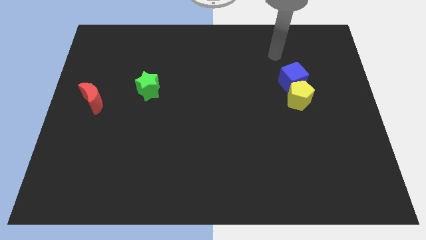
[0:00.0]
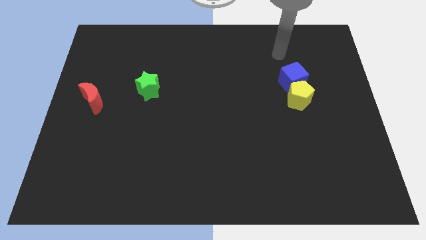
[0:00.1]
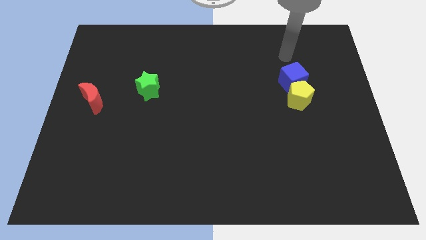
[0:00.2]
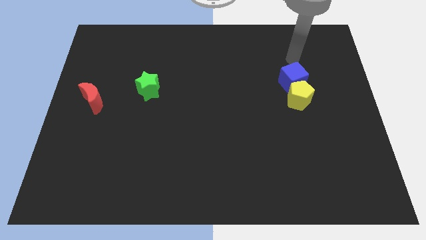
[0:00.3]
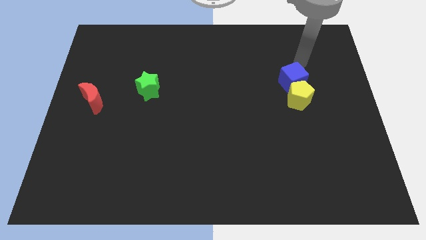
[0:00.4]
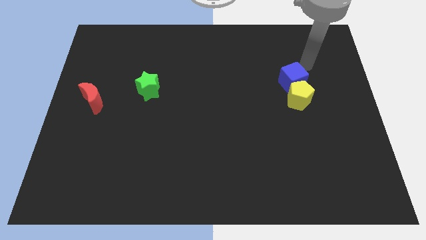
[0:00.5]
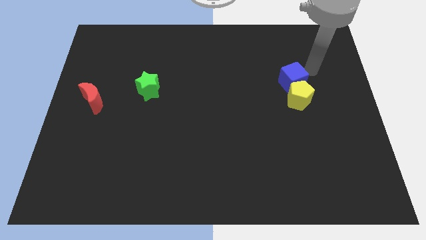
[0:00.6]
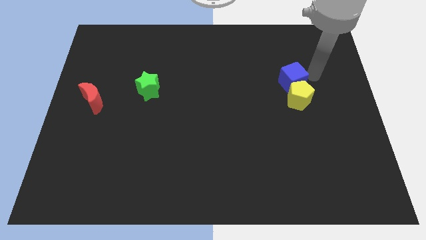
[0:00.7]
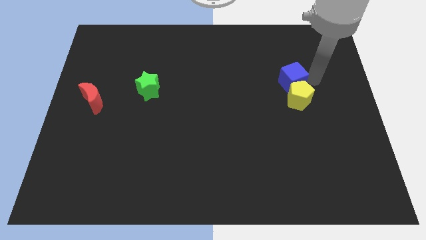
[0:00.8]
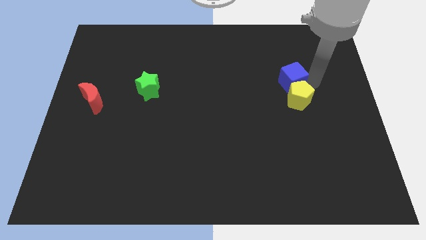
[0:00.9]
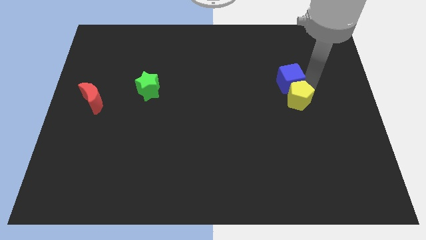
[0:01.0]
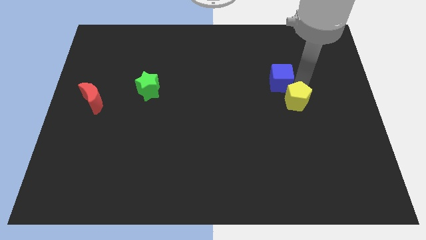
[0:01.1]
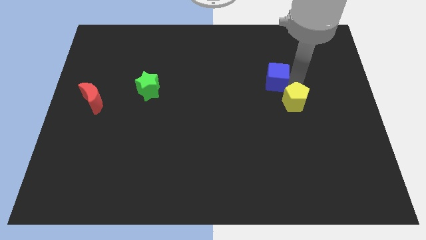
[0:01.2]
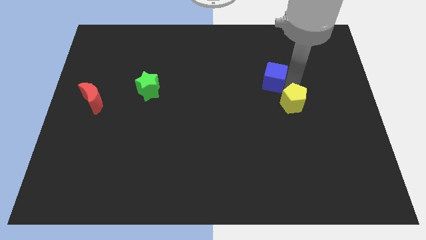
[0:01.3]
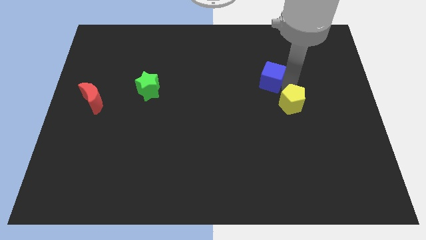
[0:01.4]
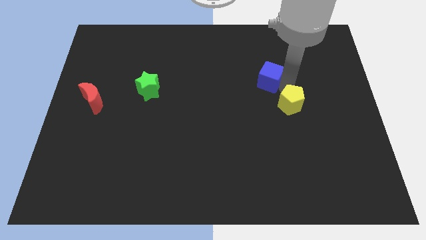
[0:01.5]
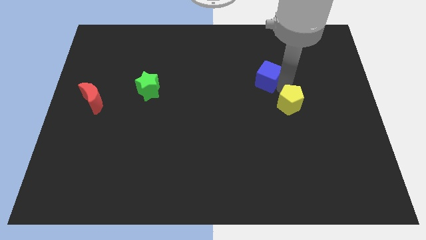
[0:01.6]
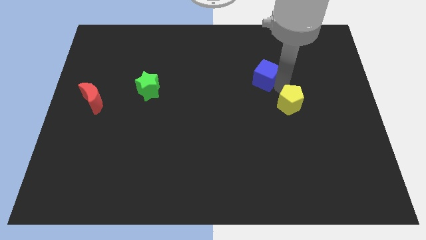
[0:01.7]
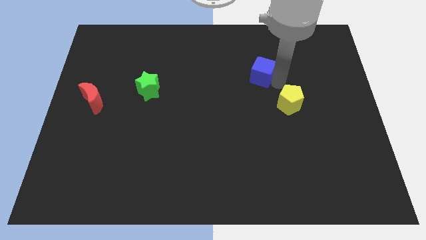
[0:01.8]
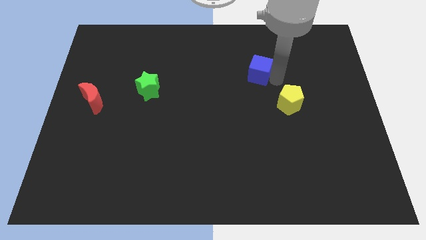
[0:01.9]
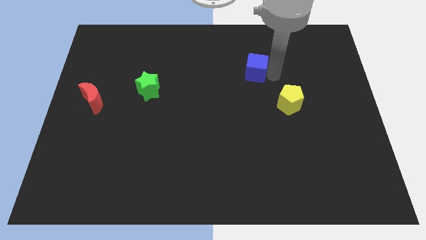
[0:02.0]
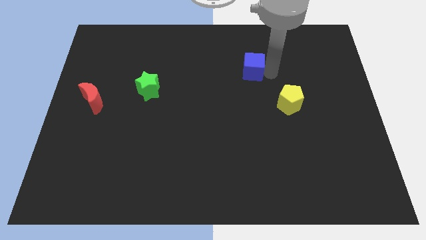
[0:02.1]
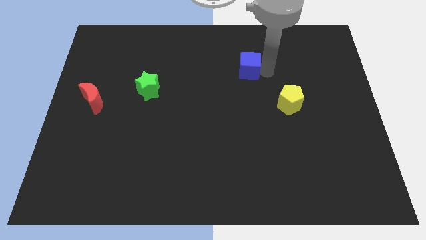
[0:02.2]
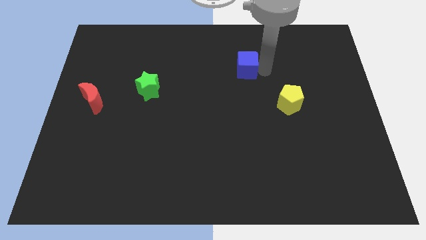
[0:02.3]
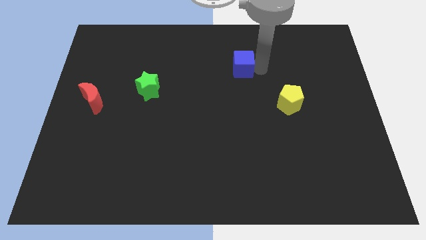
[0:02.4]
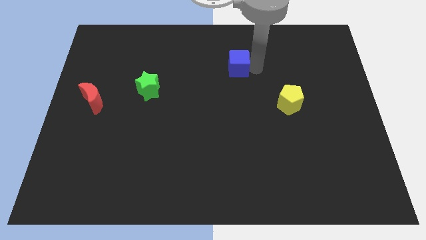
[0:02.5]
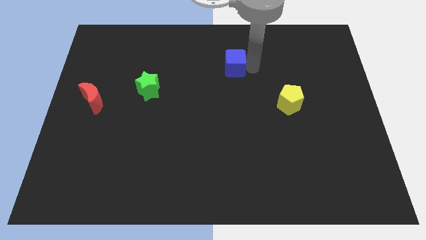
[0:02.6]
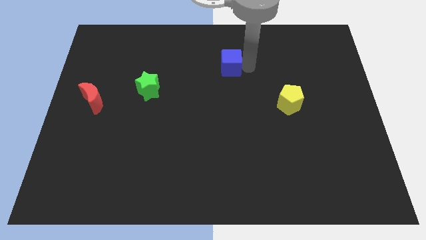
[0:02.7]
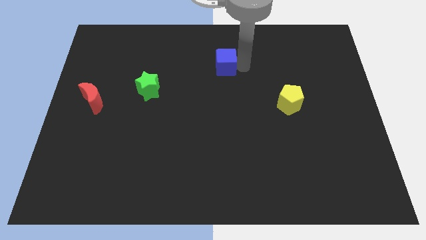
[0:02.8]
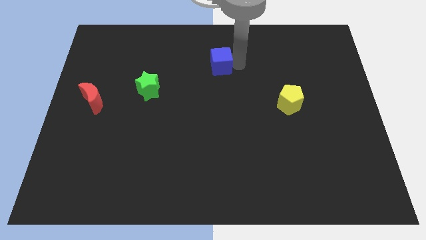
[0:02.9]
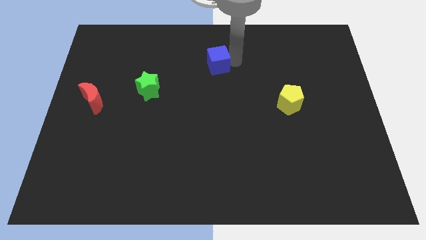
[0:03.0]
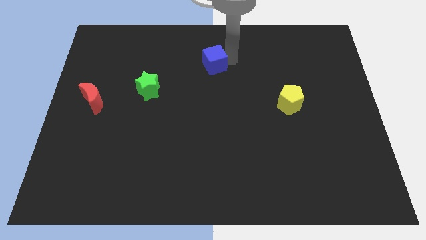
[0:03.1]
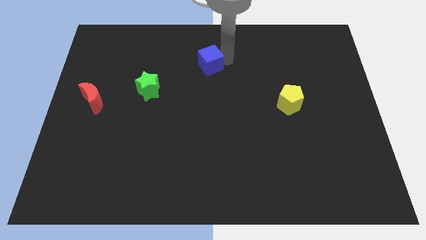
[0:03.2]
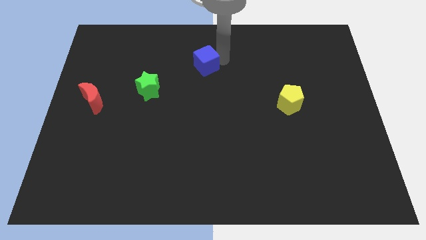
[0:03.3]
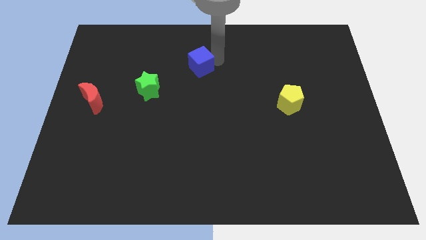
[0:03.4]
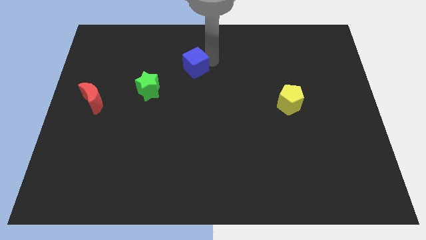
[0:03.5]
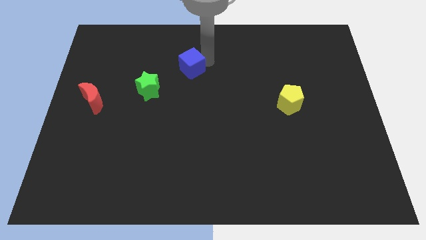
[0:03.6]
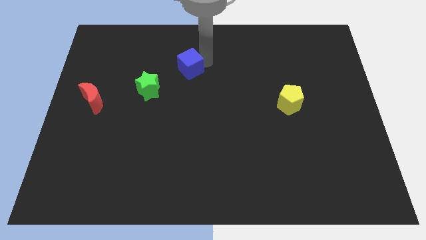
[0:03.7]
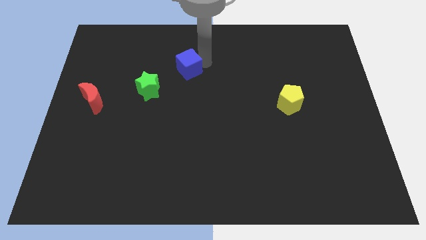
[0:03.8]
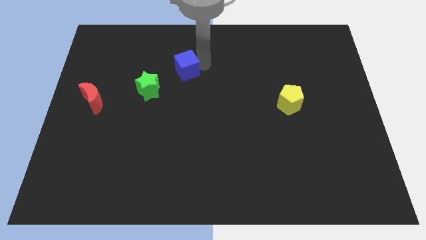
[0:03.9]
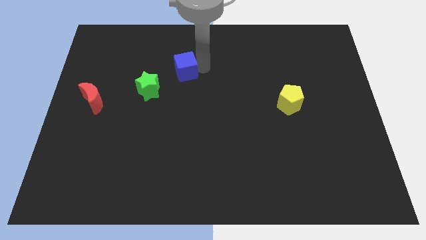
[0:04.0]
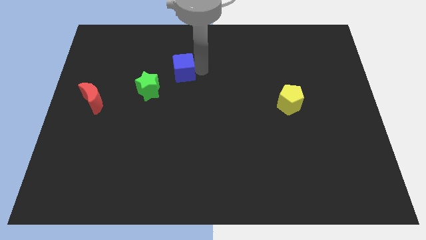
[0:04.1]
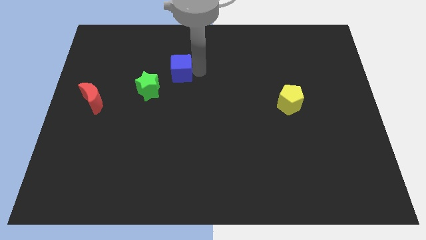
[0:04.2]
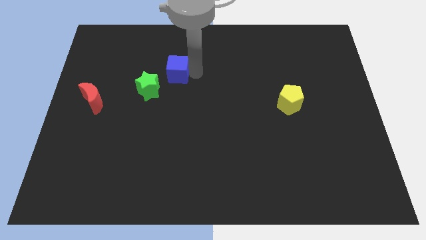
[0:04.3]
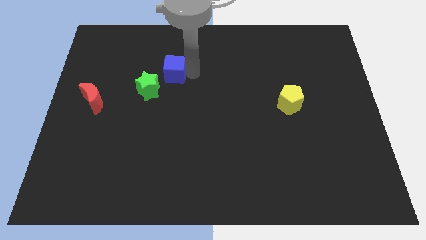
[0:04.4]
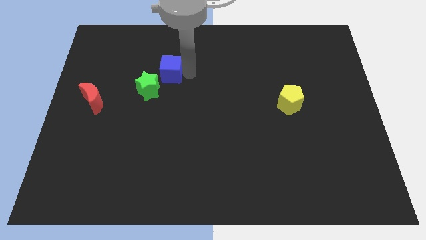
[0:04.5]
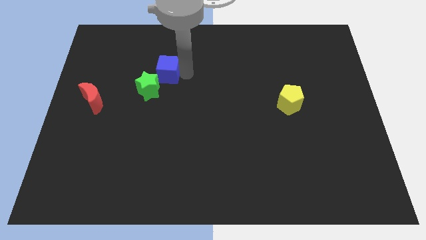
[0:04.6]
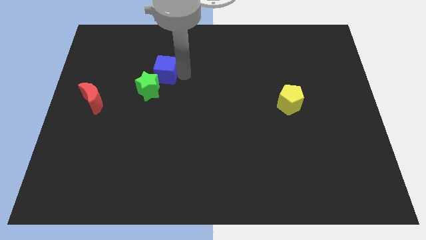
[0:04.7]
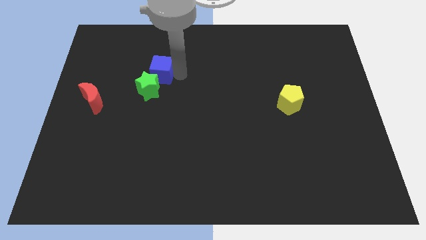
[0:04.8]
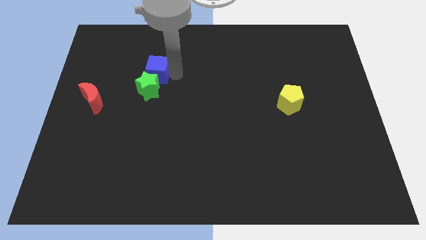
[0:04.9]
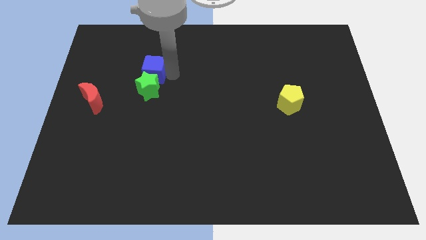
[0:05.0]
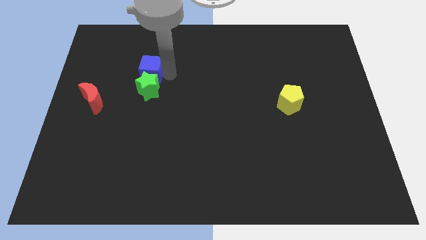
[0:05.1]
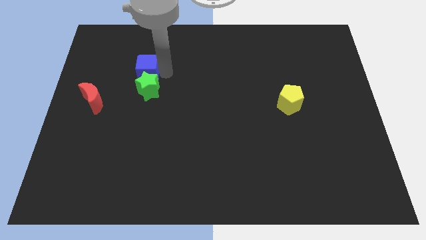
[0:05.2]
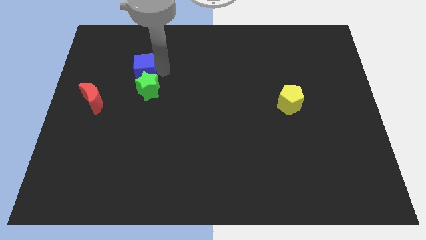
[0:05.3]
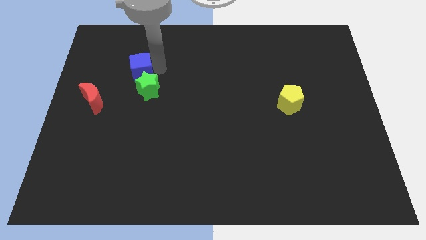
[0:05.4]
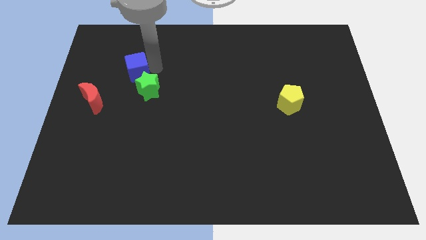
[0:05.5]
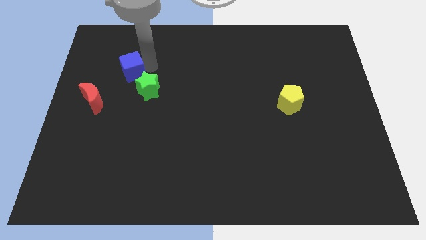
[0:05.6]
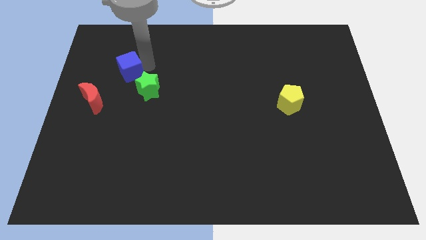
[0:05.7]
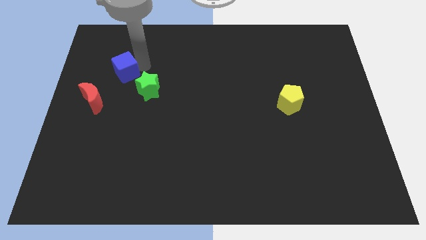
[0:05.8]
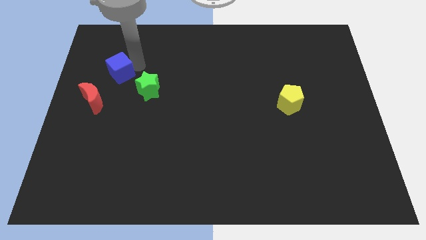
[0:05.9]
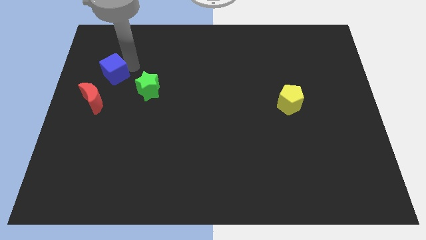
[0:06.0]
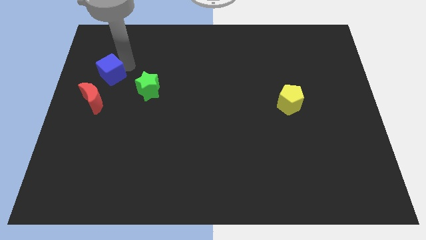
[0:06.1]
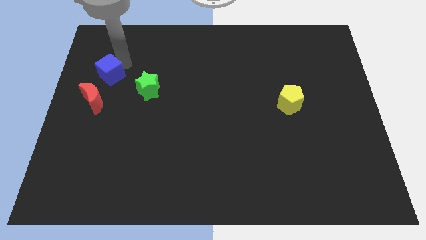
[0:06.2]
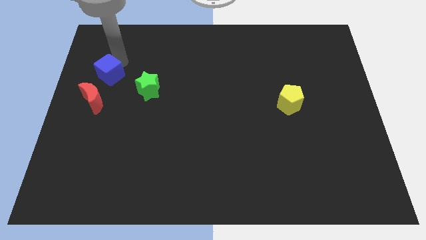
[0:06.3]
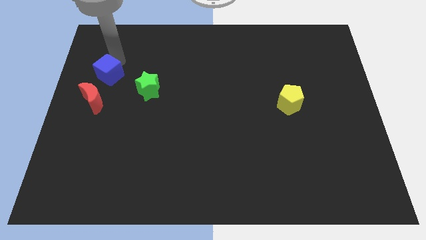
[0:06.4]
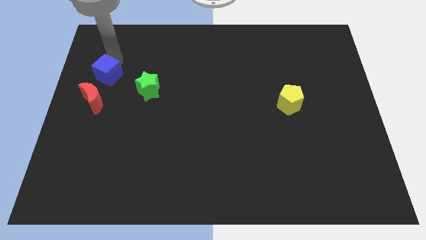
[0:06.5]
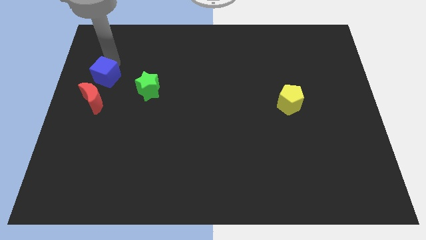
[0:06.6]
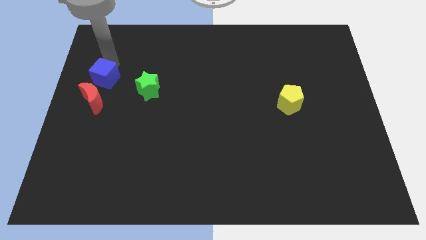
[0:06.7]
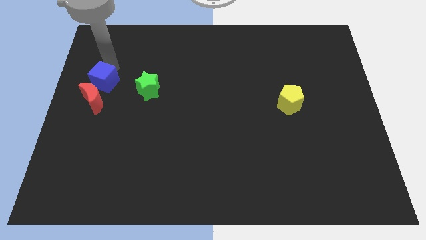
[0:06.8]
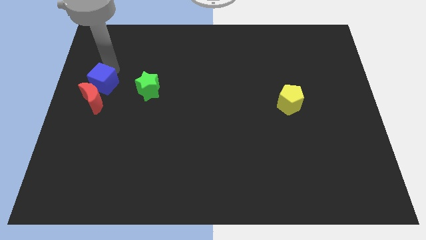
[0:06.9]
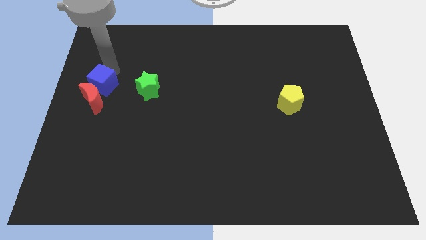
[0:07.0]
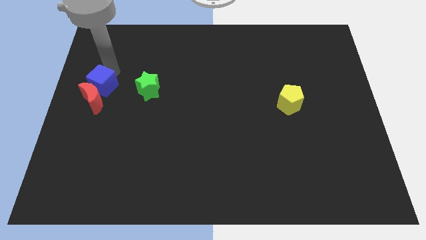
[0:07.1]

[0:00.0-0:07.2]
put the cube next to the moon

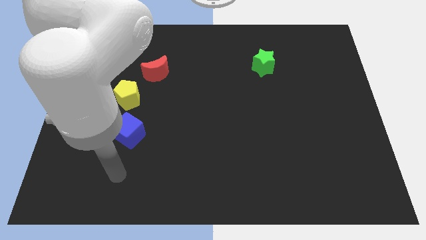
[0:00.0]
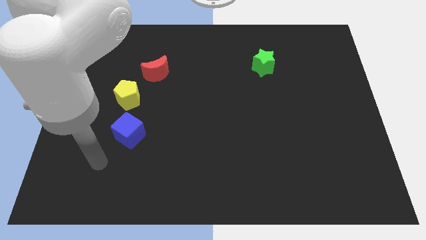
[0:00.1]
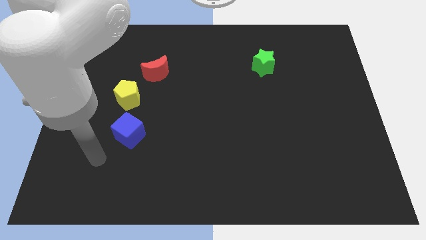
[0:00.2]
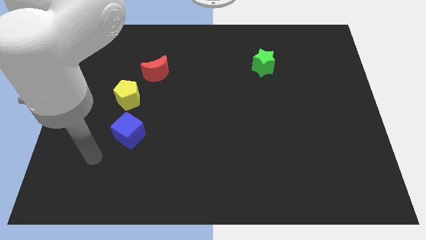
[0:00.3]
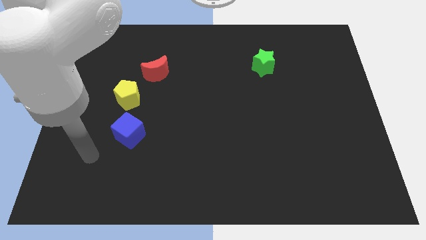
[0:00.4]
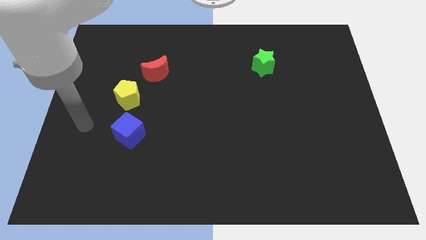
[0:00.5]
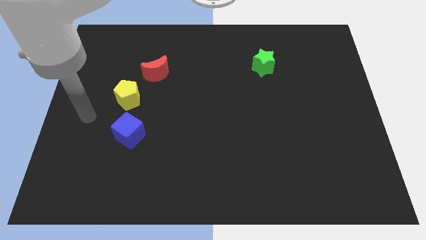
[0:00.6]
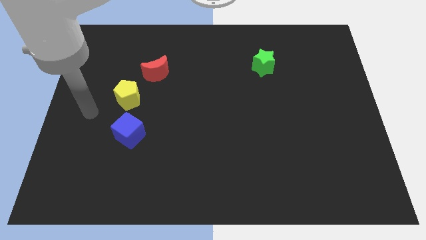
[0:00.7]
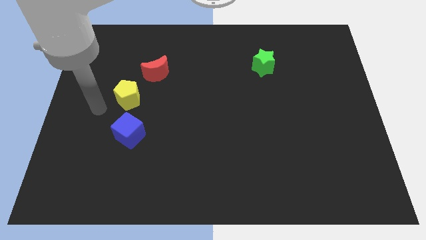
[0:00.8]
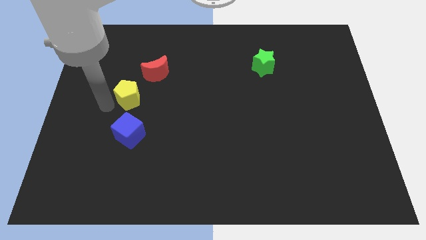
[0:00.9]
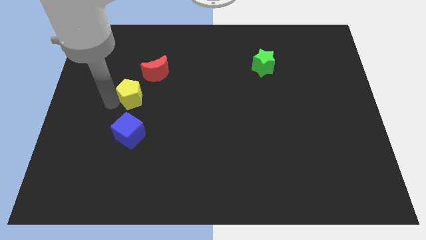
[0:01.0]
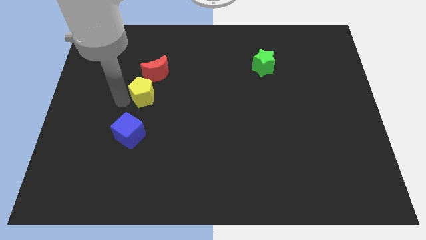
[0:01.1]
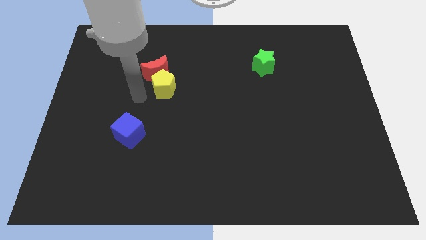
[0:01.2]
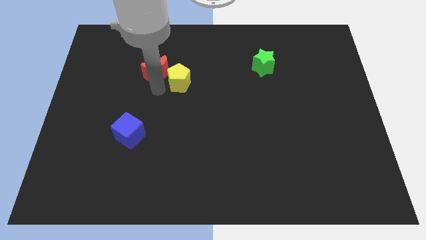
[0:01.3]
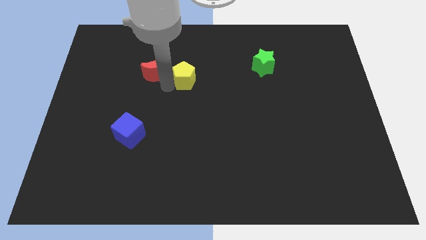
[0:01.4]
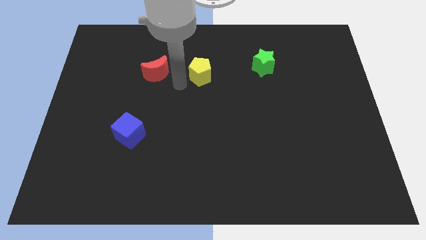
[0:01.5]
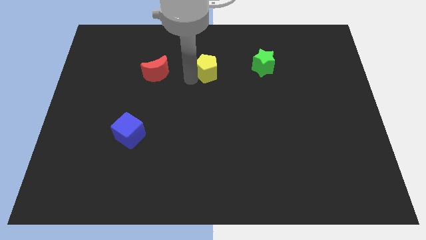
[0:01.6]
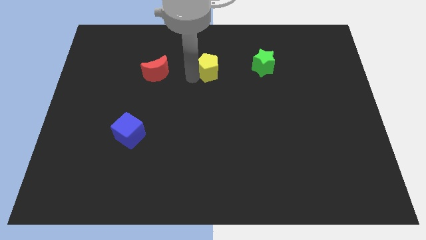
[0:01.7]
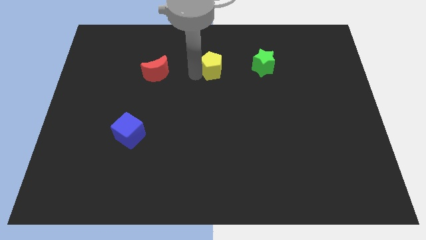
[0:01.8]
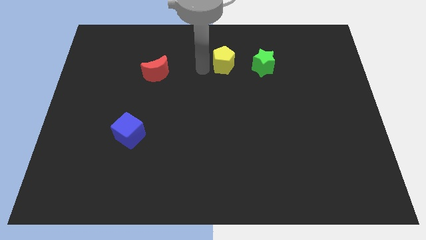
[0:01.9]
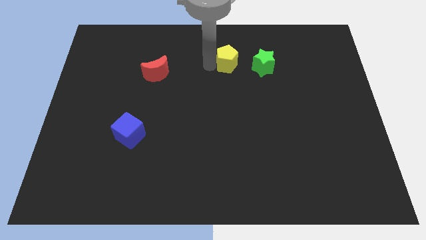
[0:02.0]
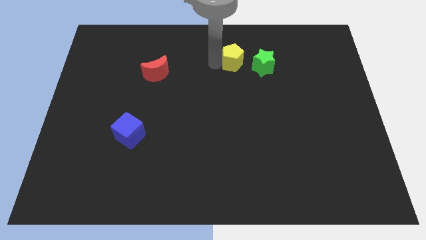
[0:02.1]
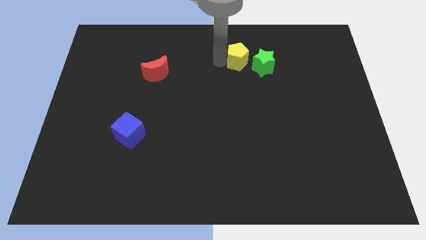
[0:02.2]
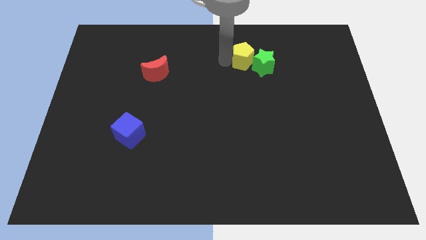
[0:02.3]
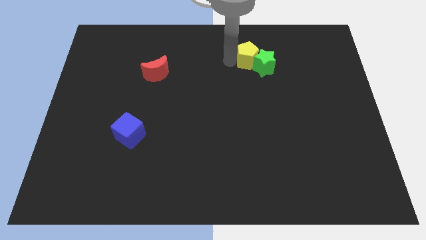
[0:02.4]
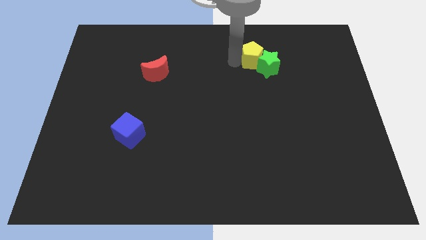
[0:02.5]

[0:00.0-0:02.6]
slide the yellow pentagon towards the star
